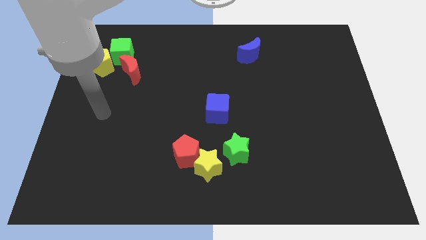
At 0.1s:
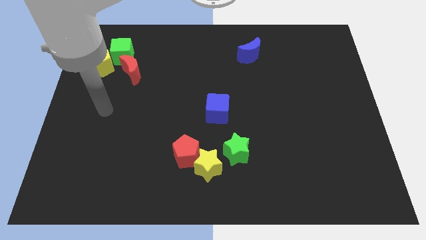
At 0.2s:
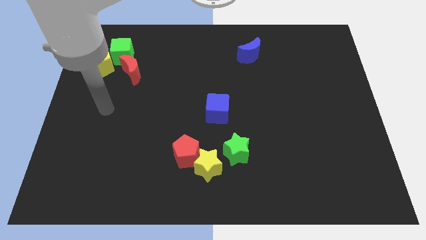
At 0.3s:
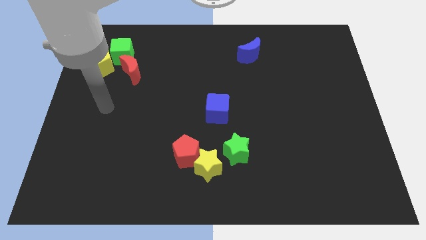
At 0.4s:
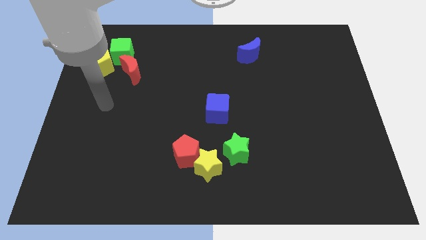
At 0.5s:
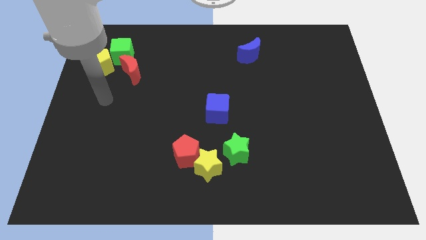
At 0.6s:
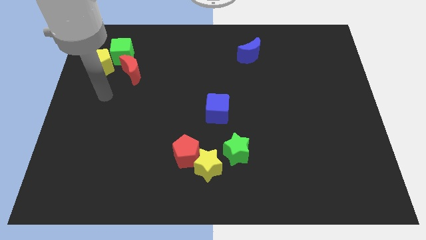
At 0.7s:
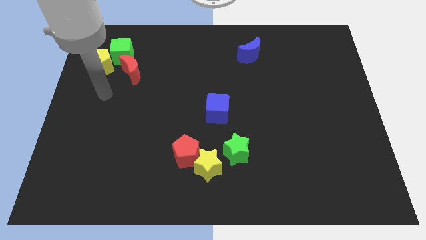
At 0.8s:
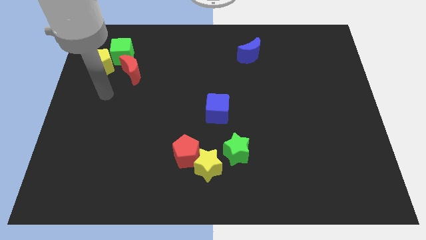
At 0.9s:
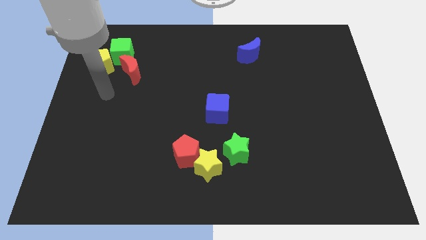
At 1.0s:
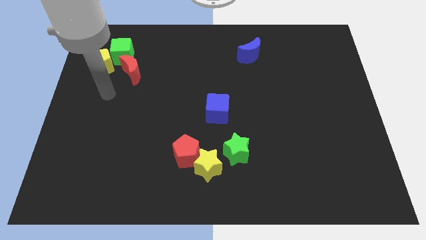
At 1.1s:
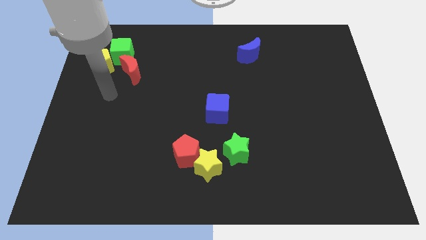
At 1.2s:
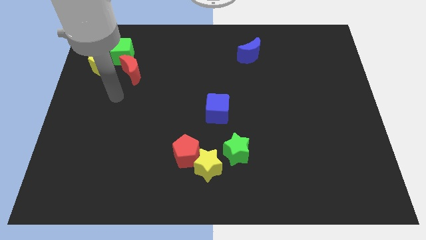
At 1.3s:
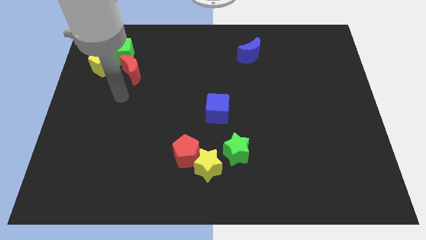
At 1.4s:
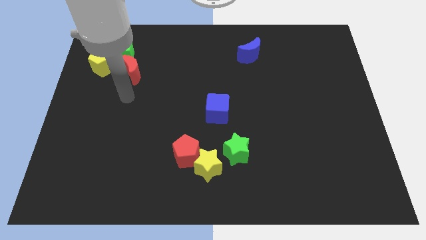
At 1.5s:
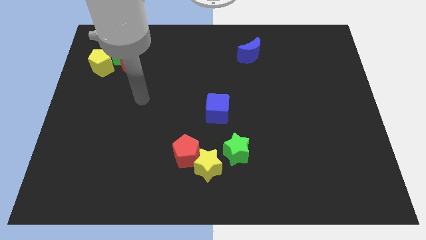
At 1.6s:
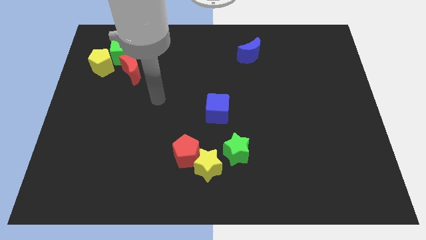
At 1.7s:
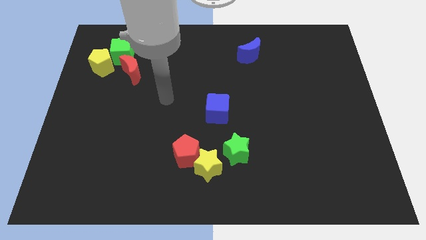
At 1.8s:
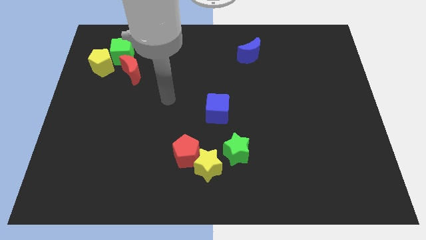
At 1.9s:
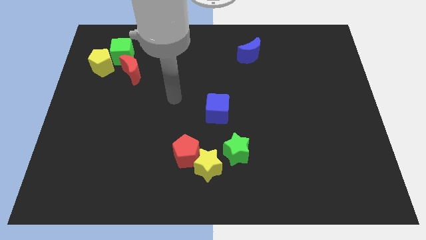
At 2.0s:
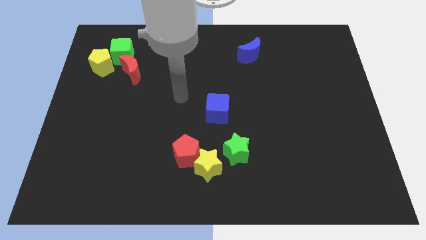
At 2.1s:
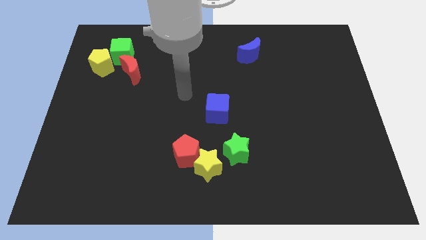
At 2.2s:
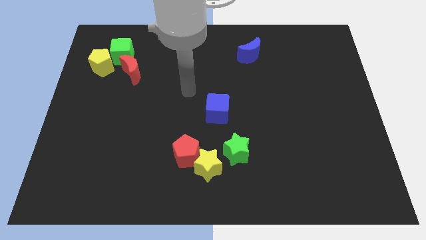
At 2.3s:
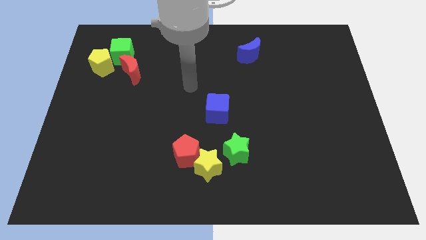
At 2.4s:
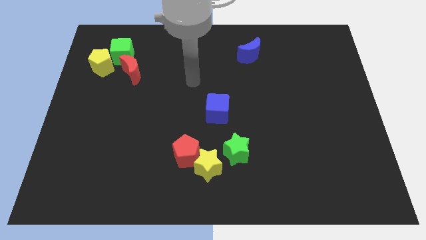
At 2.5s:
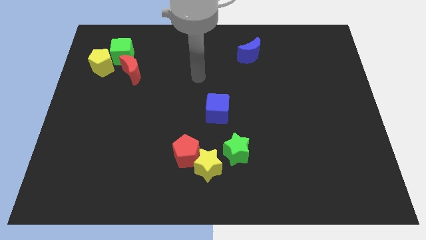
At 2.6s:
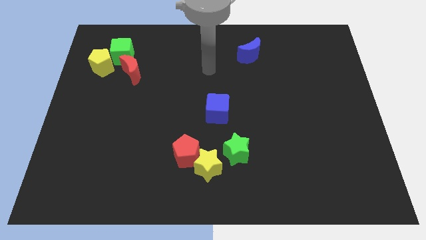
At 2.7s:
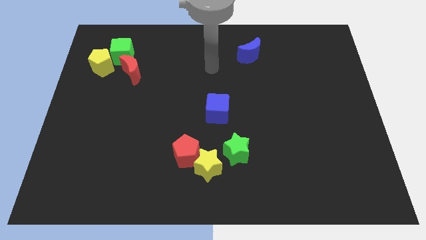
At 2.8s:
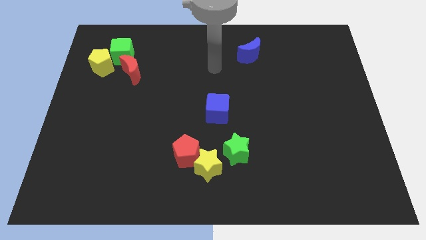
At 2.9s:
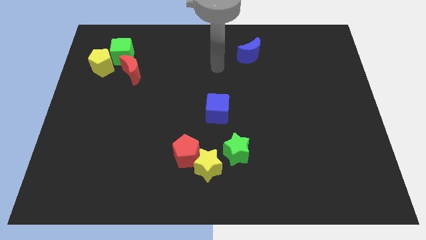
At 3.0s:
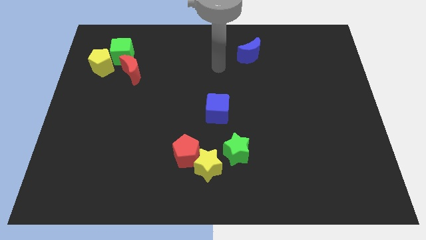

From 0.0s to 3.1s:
slide your arm above the blue cube

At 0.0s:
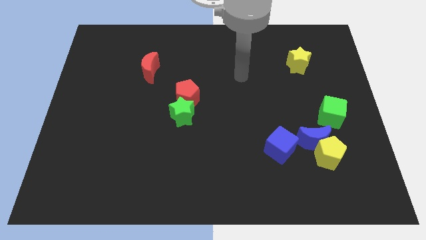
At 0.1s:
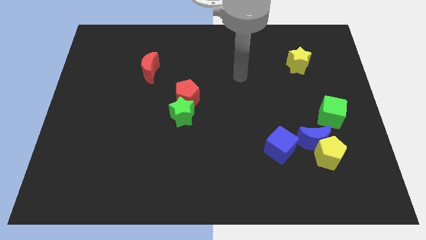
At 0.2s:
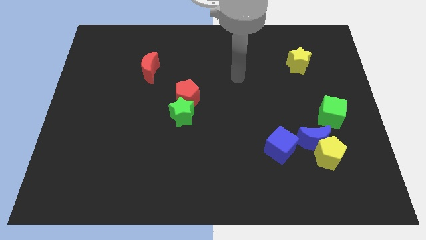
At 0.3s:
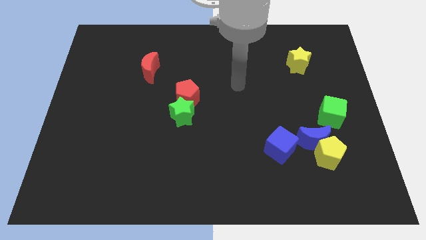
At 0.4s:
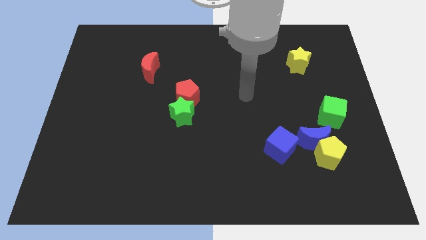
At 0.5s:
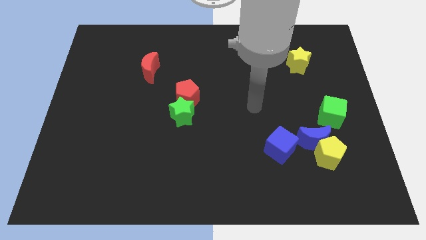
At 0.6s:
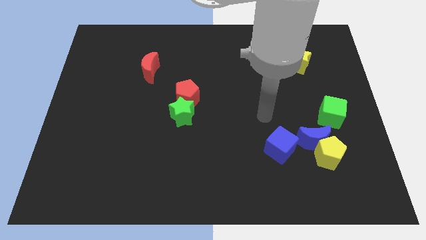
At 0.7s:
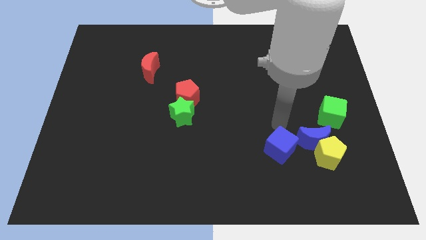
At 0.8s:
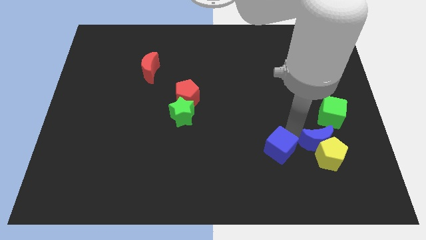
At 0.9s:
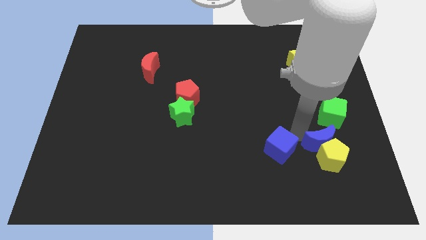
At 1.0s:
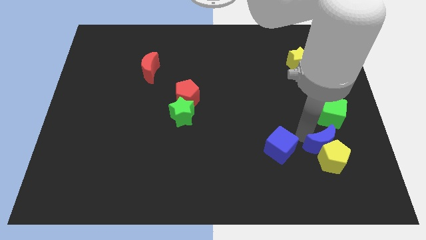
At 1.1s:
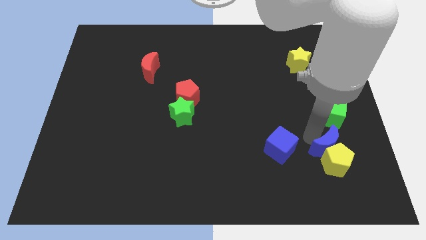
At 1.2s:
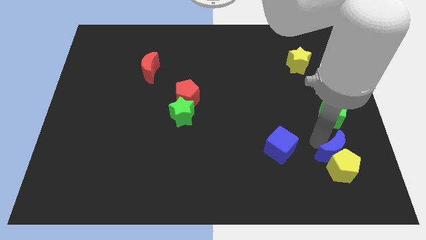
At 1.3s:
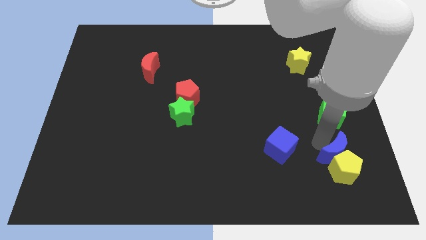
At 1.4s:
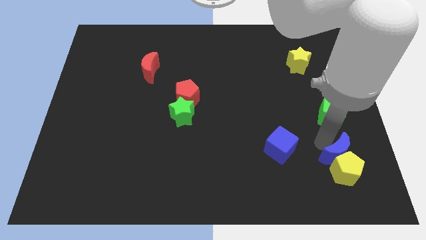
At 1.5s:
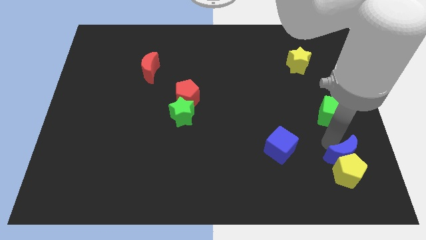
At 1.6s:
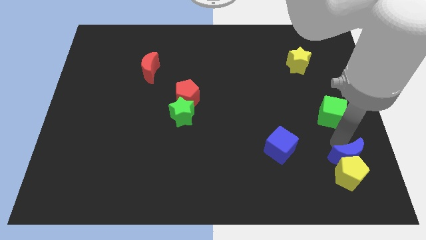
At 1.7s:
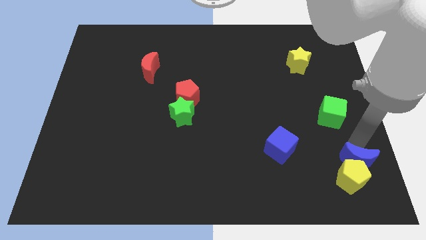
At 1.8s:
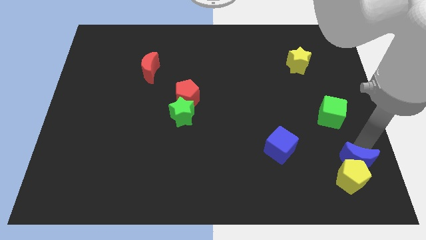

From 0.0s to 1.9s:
push the yellow pentagon and blue crescent towards the top right bottom of the board

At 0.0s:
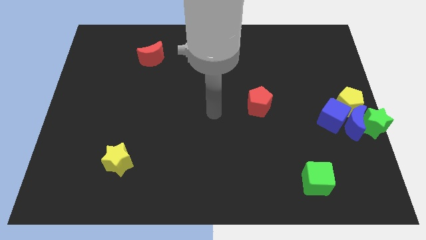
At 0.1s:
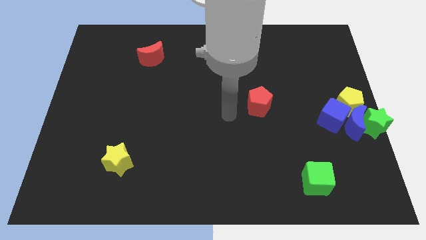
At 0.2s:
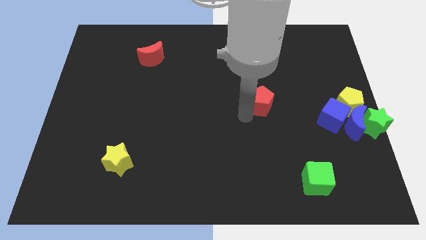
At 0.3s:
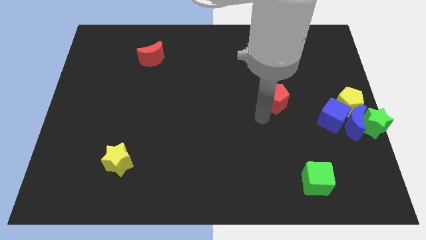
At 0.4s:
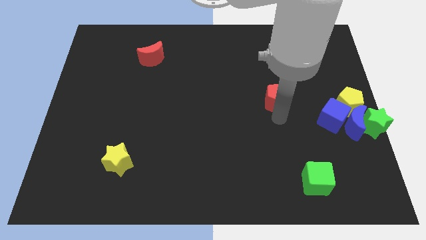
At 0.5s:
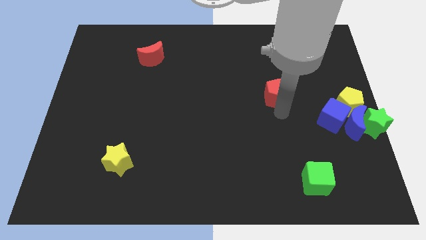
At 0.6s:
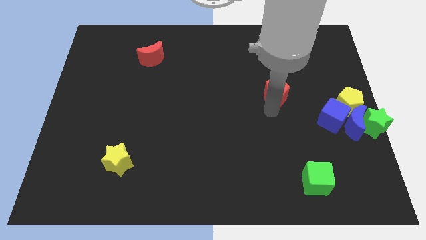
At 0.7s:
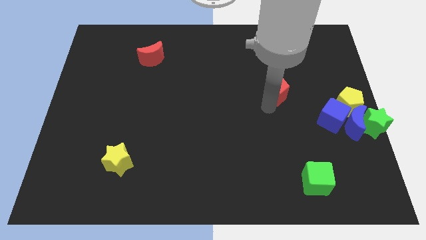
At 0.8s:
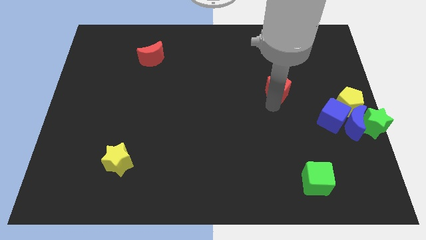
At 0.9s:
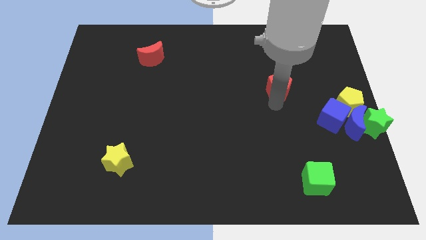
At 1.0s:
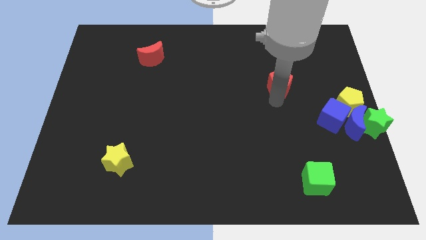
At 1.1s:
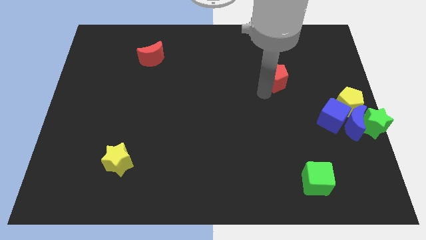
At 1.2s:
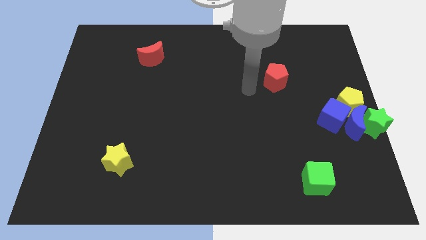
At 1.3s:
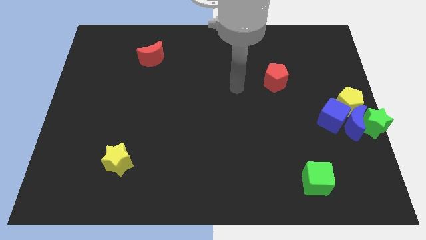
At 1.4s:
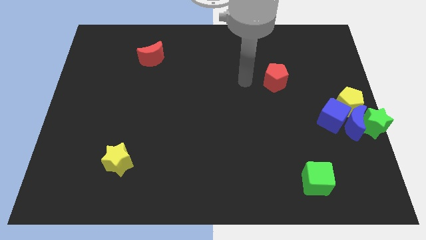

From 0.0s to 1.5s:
drag the red pentagon upwards

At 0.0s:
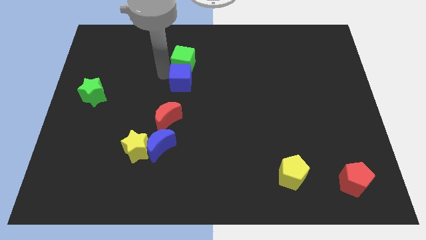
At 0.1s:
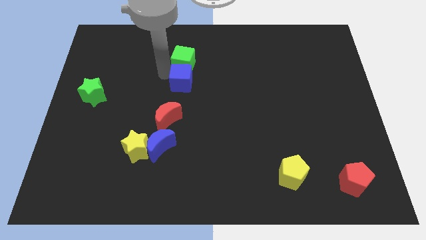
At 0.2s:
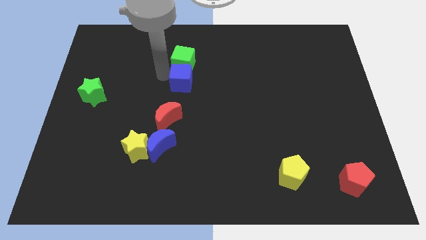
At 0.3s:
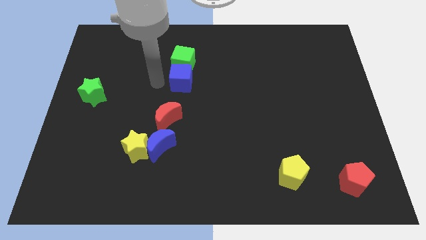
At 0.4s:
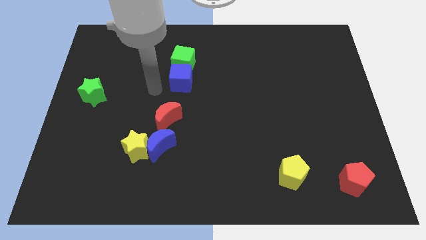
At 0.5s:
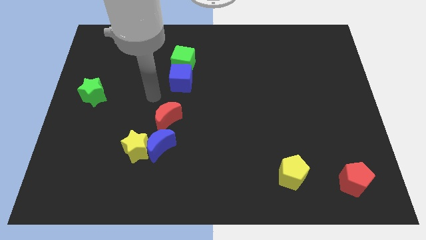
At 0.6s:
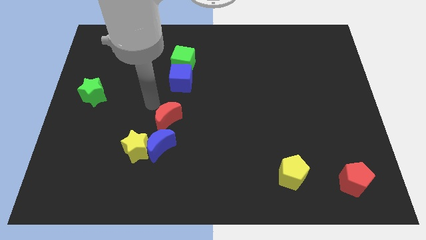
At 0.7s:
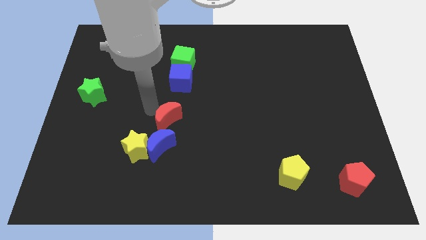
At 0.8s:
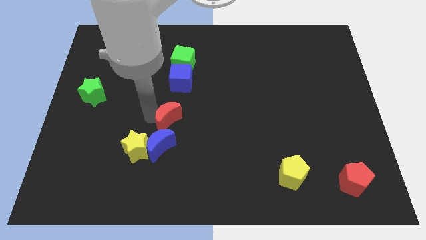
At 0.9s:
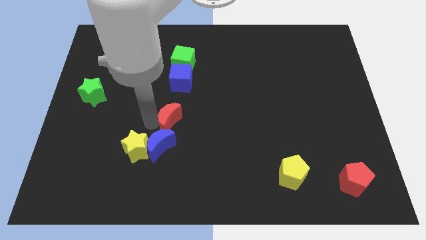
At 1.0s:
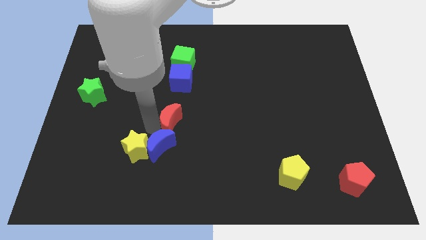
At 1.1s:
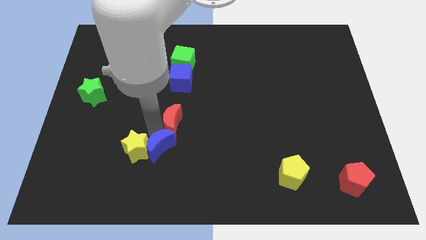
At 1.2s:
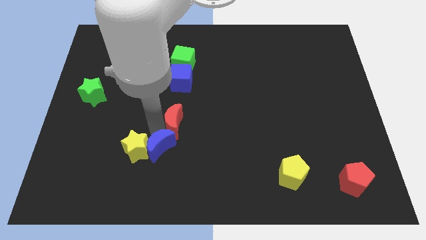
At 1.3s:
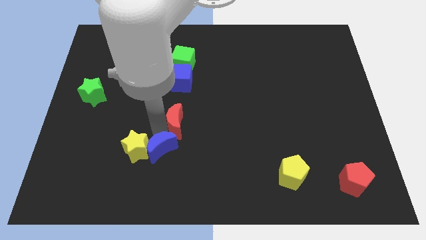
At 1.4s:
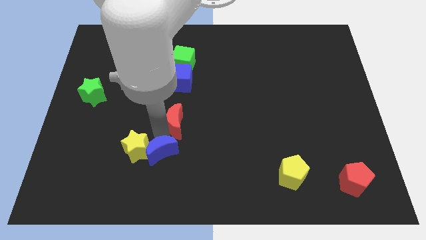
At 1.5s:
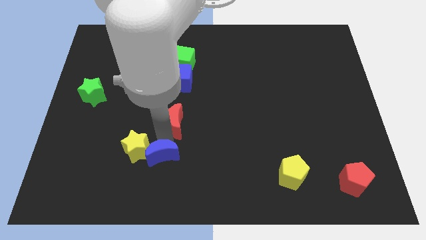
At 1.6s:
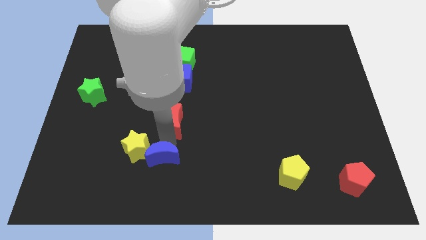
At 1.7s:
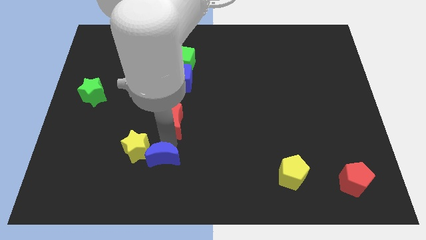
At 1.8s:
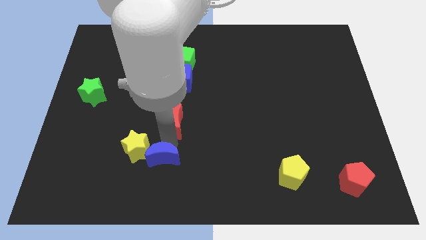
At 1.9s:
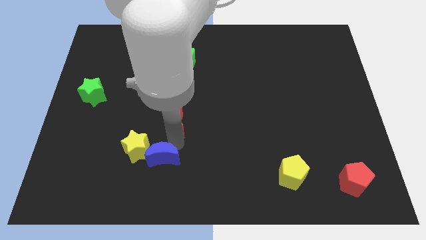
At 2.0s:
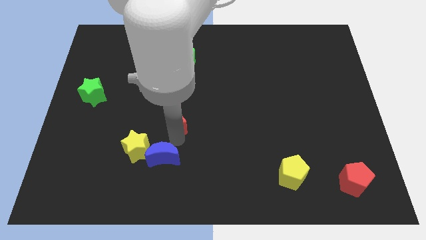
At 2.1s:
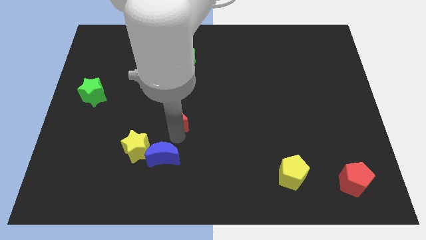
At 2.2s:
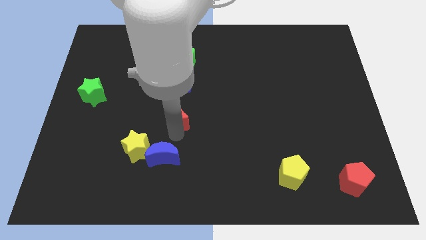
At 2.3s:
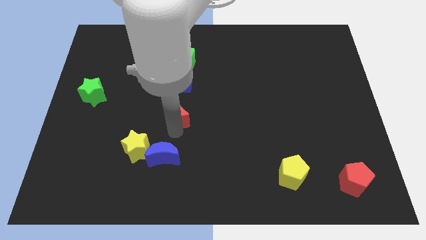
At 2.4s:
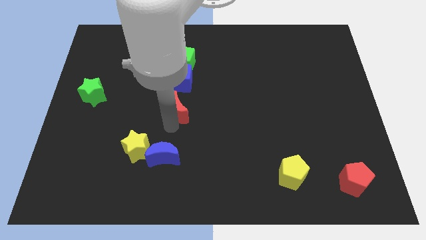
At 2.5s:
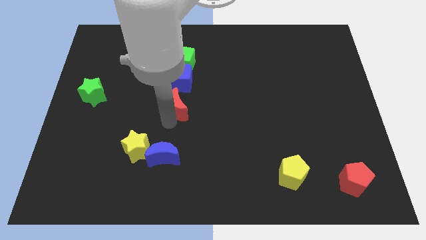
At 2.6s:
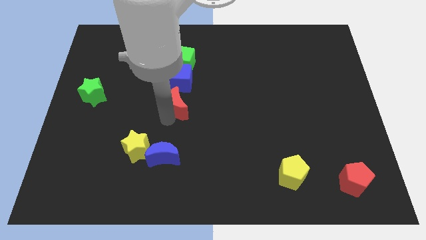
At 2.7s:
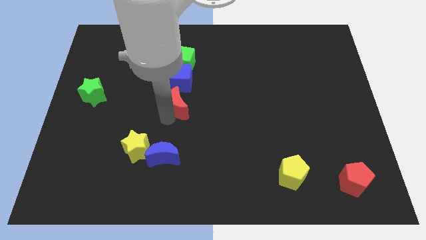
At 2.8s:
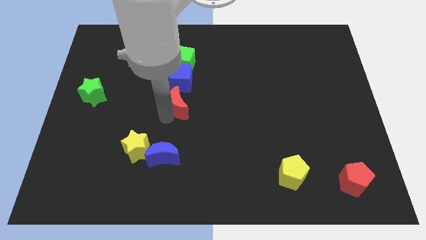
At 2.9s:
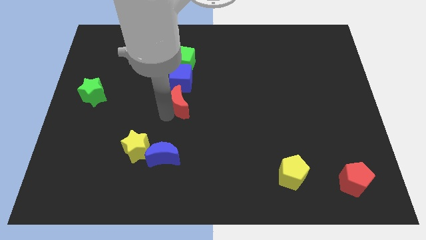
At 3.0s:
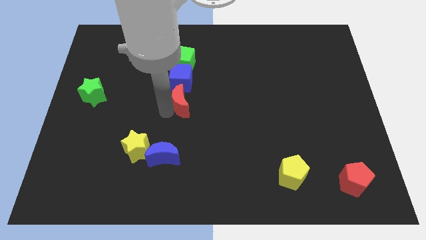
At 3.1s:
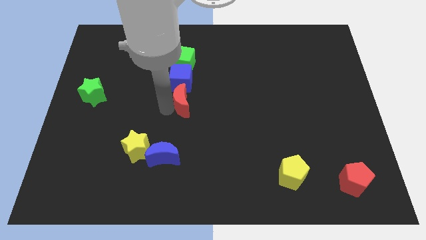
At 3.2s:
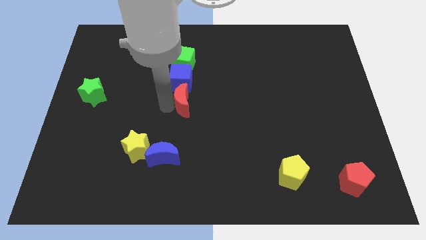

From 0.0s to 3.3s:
put the red crescent below the blue cube
